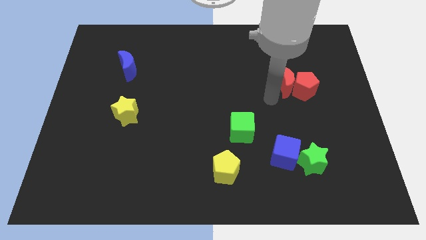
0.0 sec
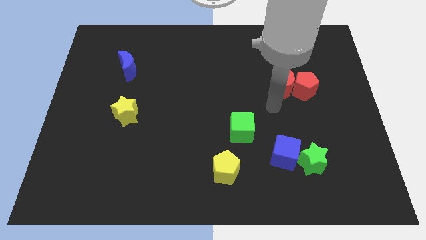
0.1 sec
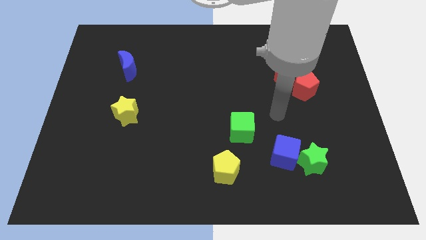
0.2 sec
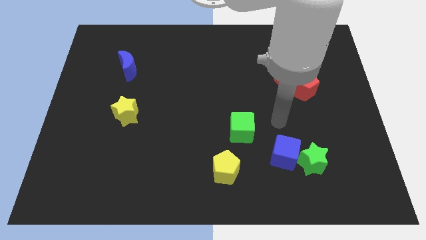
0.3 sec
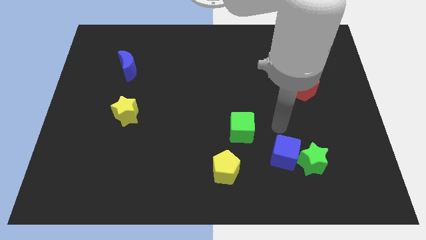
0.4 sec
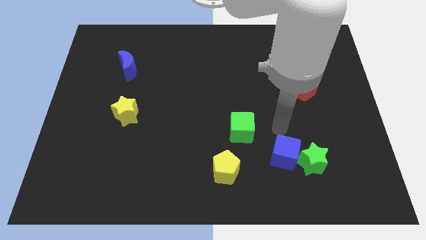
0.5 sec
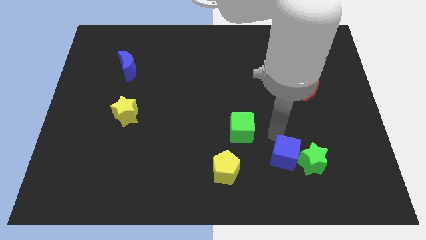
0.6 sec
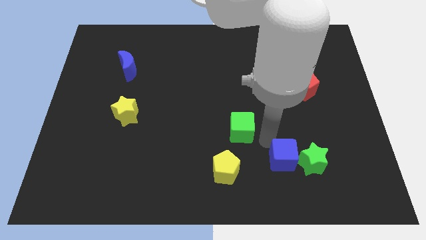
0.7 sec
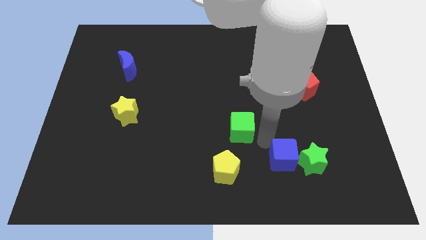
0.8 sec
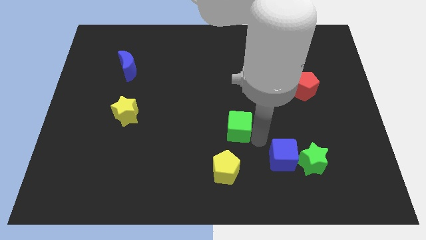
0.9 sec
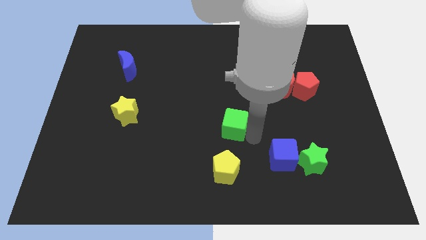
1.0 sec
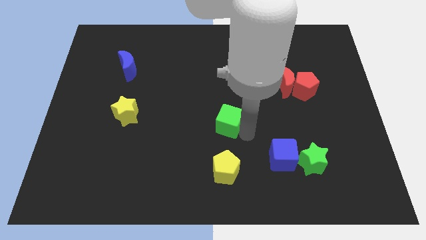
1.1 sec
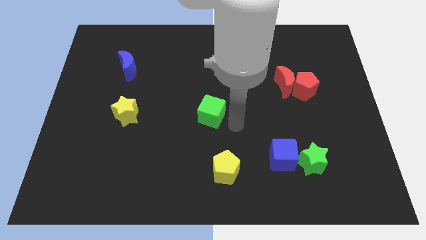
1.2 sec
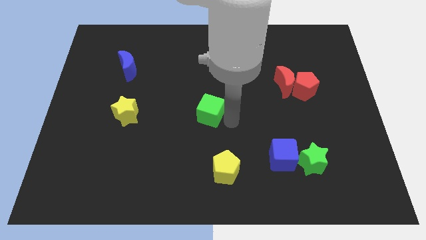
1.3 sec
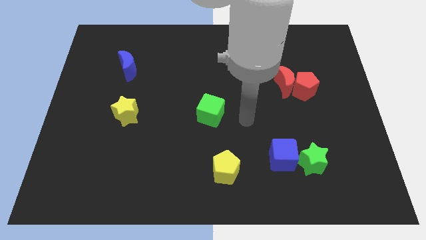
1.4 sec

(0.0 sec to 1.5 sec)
put the green cube horizontally right to the yellow star

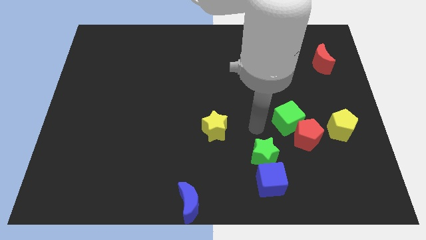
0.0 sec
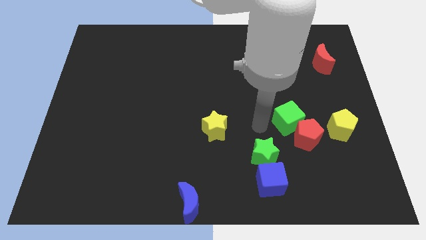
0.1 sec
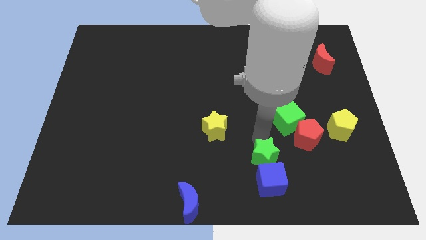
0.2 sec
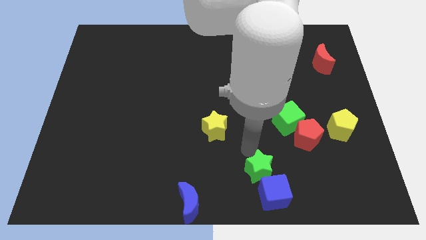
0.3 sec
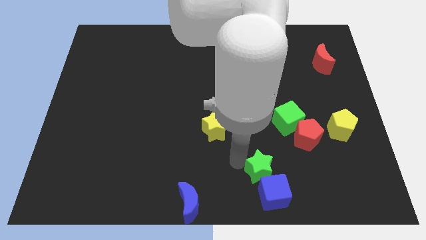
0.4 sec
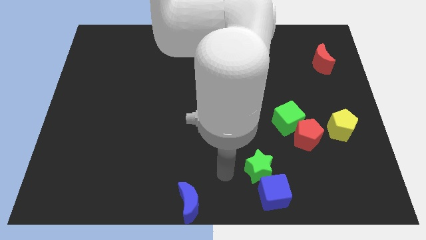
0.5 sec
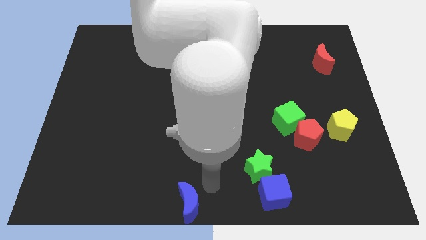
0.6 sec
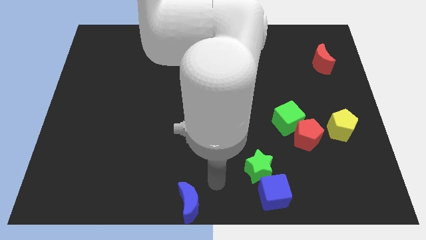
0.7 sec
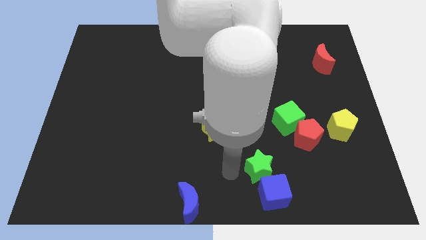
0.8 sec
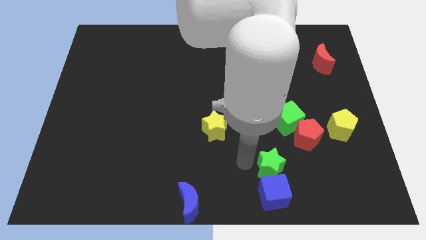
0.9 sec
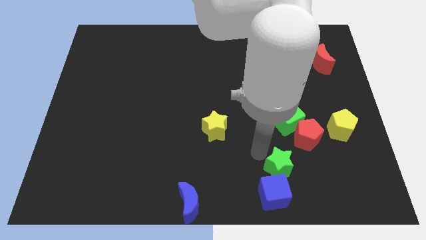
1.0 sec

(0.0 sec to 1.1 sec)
push the green star into the blue cube

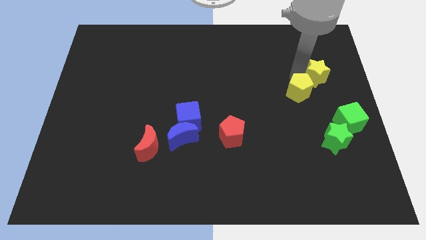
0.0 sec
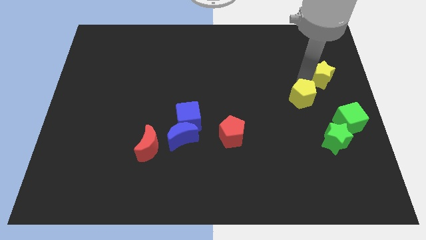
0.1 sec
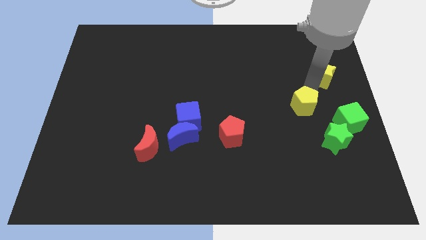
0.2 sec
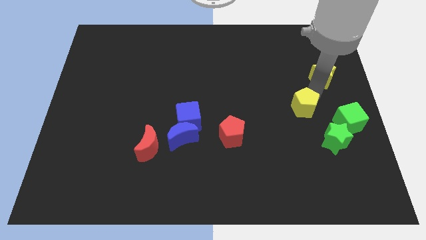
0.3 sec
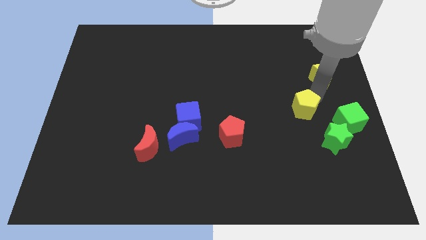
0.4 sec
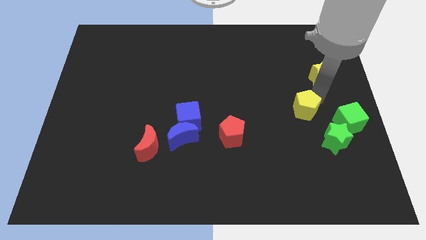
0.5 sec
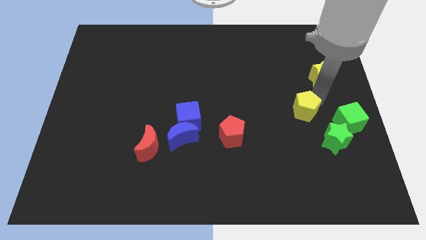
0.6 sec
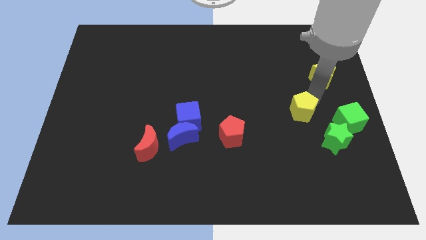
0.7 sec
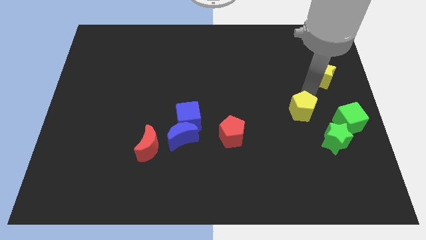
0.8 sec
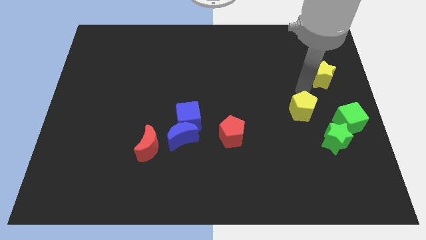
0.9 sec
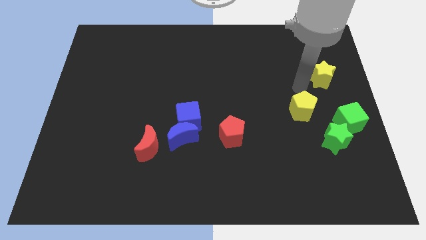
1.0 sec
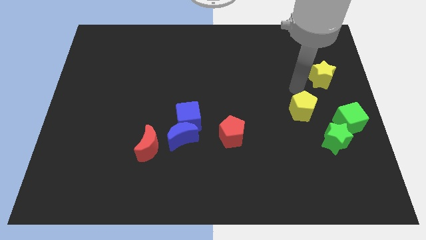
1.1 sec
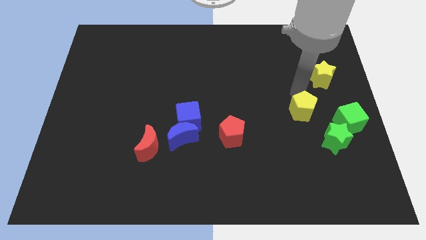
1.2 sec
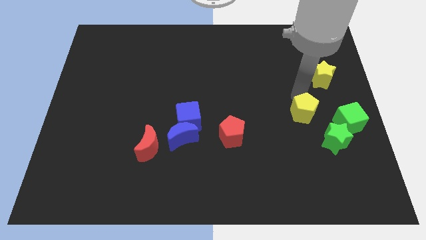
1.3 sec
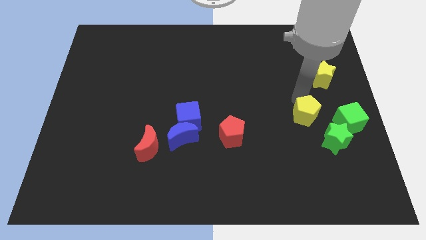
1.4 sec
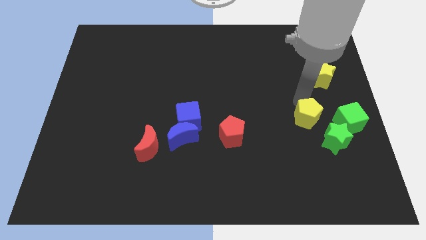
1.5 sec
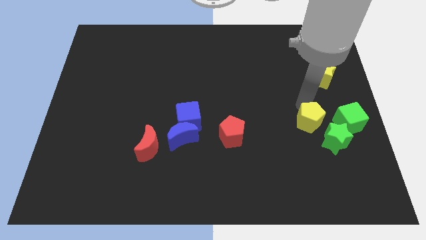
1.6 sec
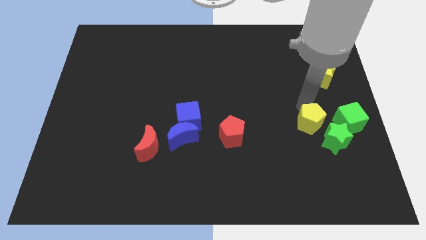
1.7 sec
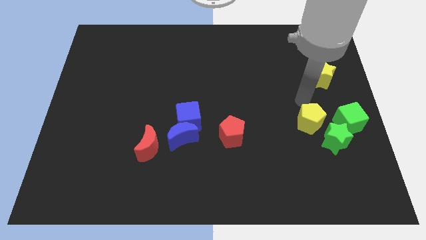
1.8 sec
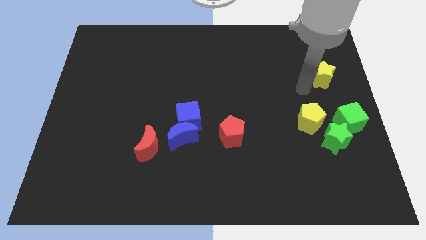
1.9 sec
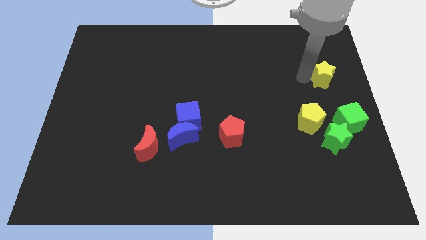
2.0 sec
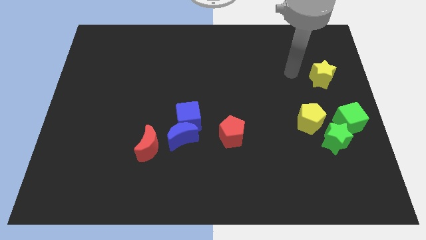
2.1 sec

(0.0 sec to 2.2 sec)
move the yellow pentagon to the left of the green cube

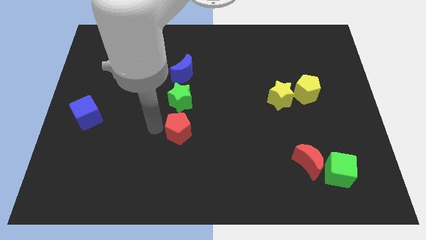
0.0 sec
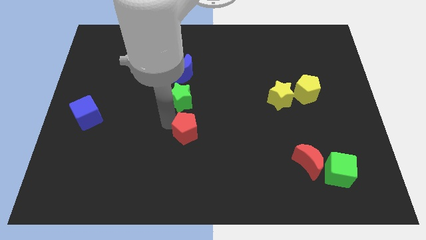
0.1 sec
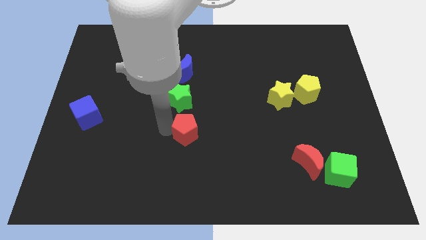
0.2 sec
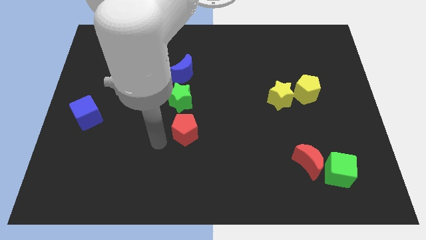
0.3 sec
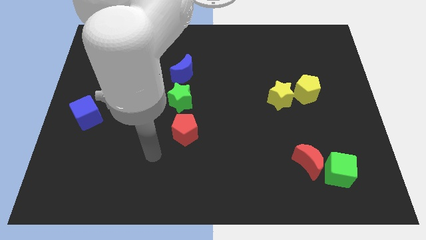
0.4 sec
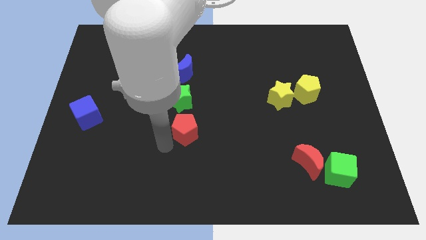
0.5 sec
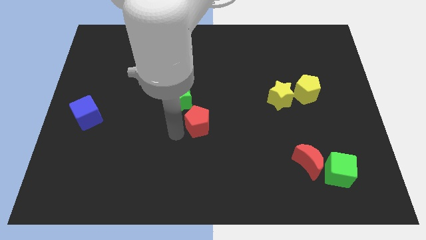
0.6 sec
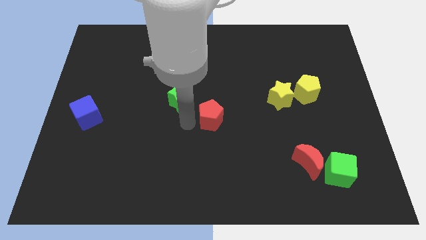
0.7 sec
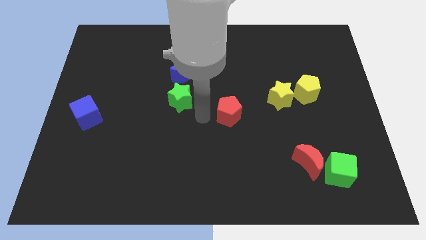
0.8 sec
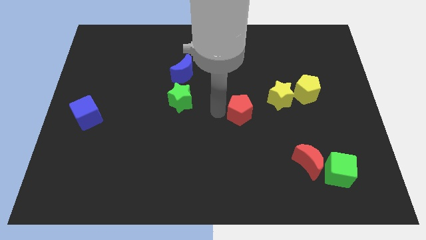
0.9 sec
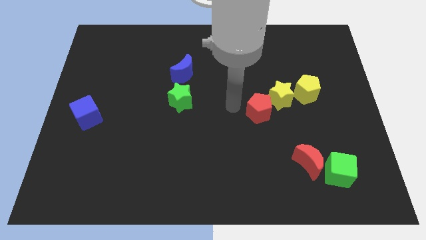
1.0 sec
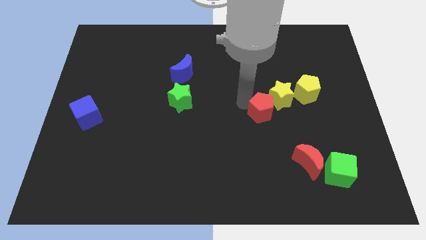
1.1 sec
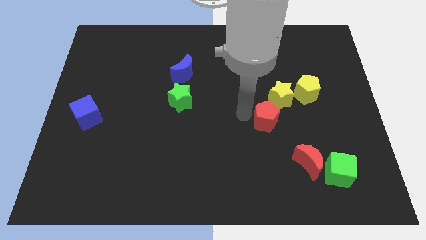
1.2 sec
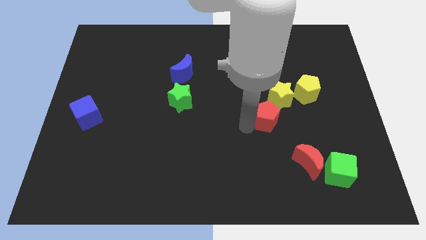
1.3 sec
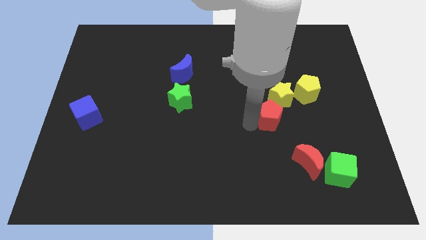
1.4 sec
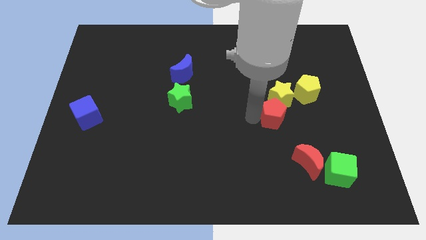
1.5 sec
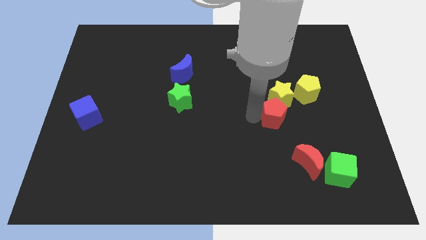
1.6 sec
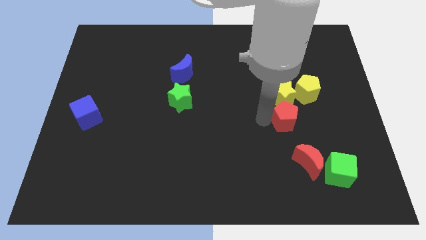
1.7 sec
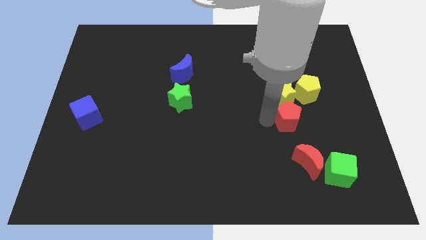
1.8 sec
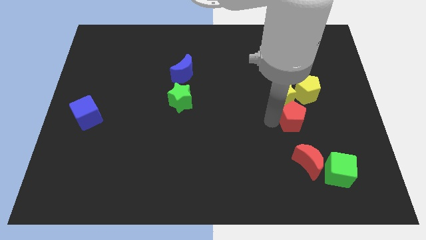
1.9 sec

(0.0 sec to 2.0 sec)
slide the red pentagon to the bottom of the yellow star

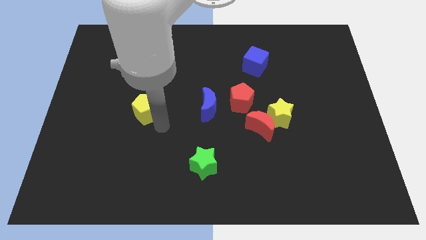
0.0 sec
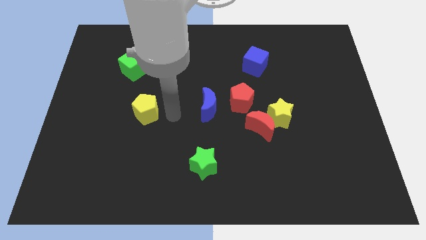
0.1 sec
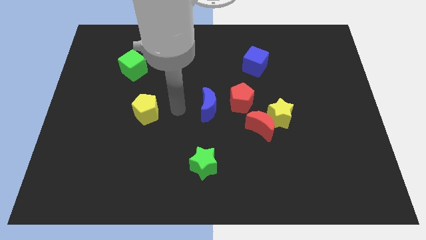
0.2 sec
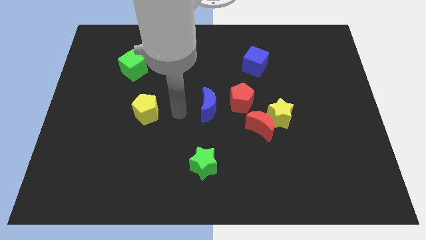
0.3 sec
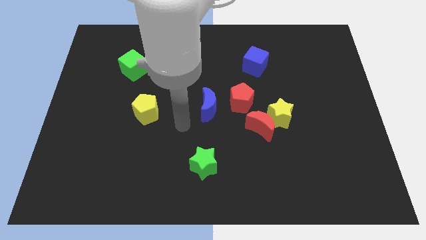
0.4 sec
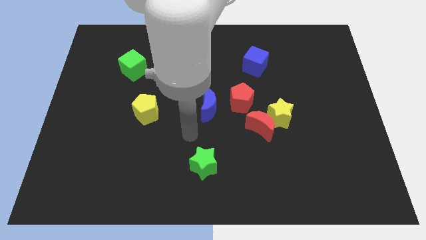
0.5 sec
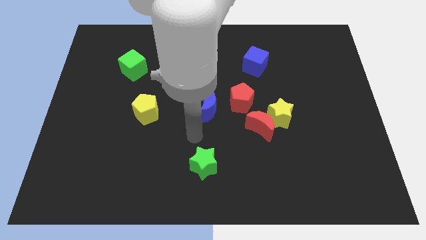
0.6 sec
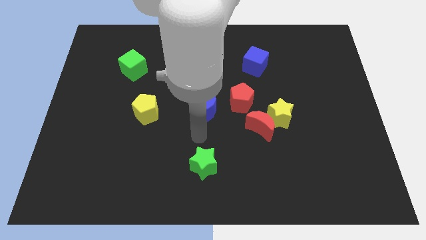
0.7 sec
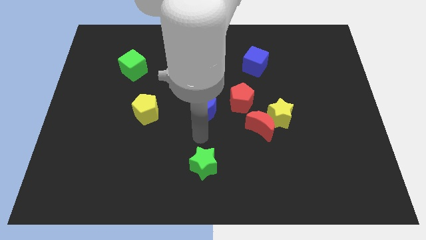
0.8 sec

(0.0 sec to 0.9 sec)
move the arm towards blue crescent

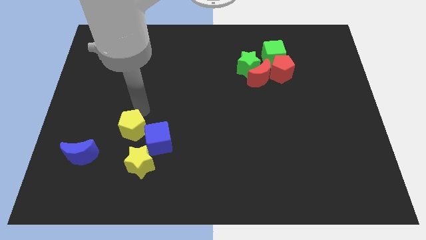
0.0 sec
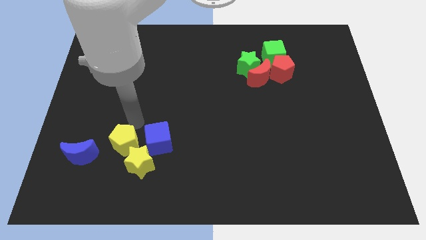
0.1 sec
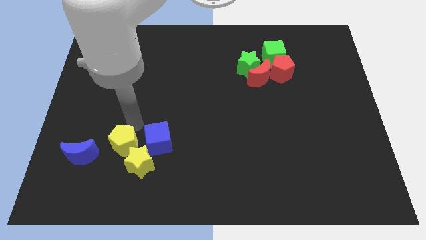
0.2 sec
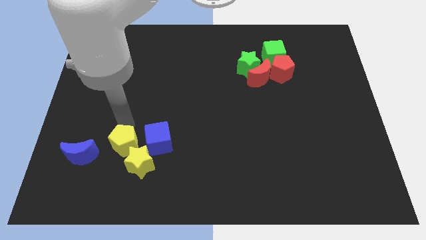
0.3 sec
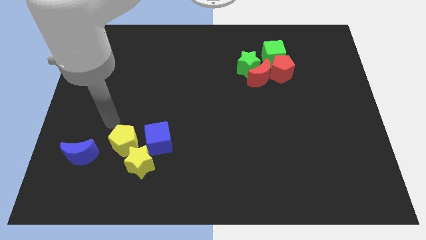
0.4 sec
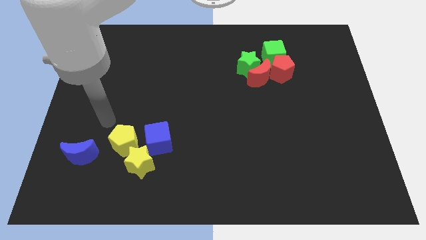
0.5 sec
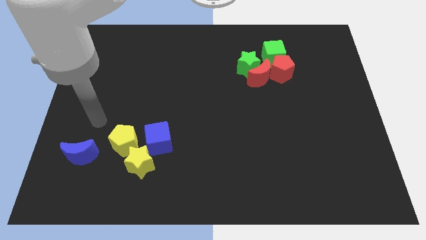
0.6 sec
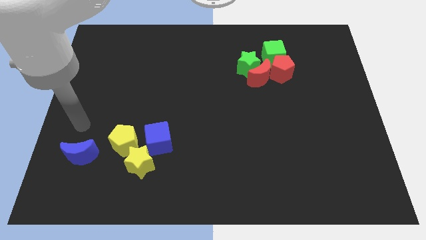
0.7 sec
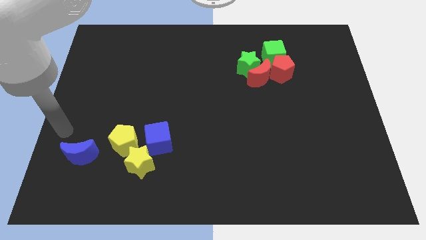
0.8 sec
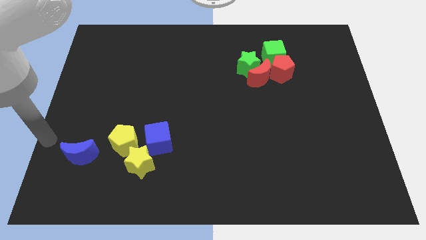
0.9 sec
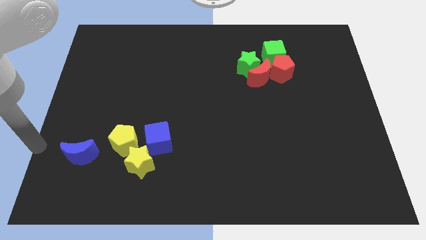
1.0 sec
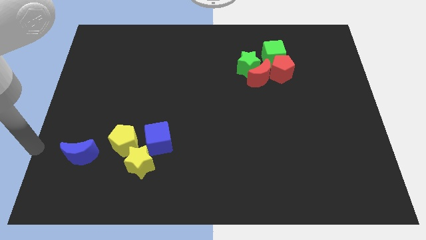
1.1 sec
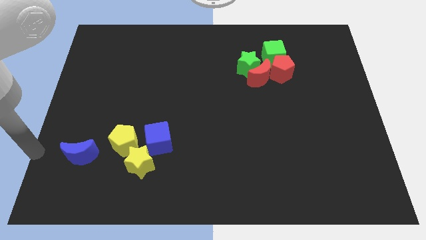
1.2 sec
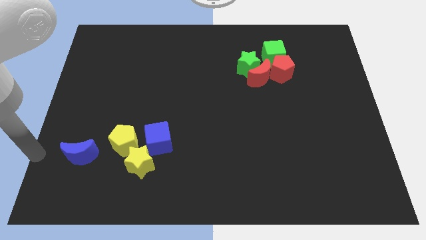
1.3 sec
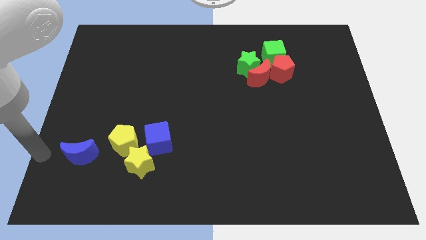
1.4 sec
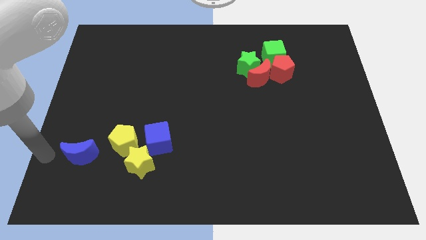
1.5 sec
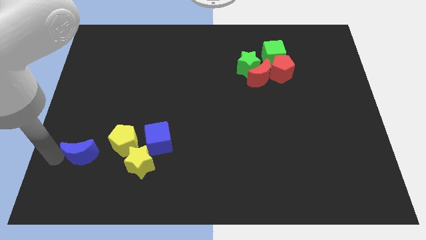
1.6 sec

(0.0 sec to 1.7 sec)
place the yellow pentagon to the left side of blue cube
